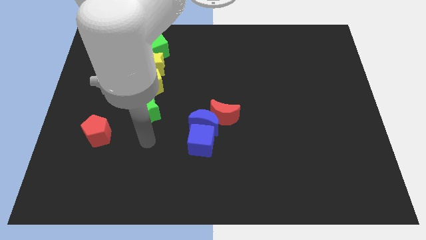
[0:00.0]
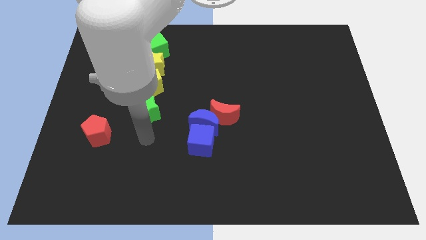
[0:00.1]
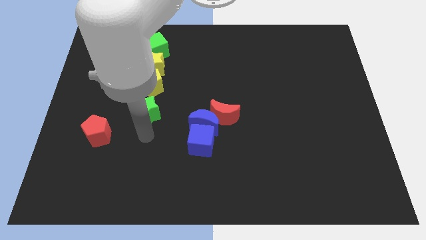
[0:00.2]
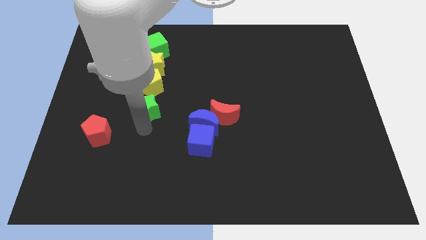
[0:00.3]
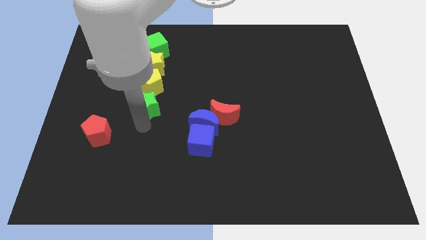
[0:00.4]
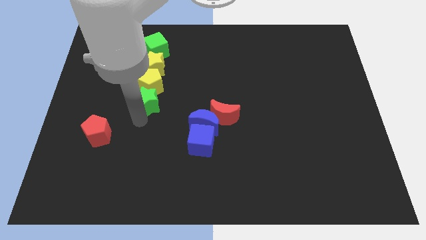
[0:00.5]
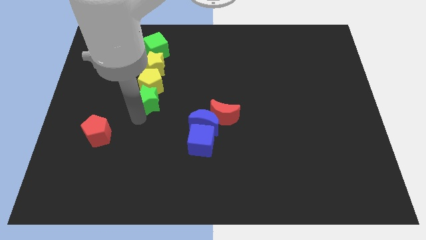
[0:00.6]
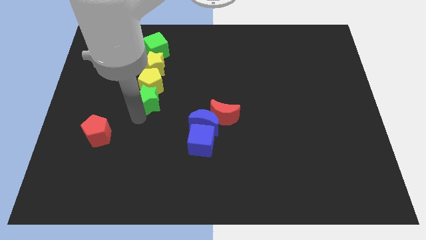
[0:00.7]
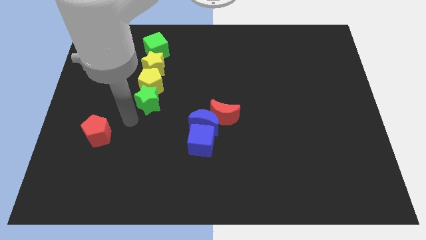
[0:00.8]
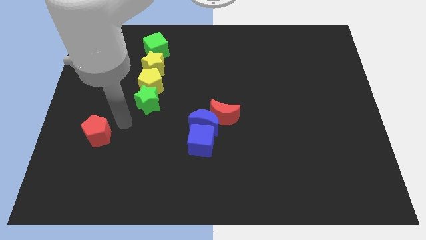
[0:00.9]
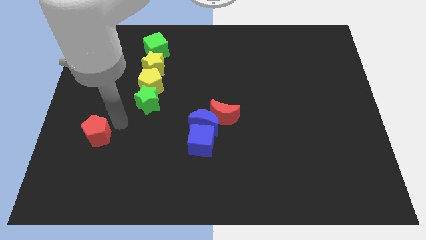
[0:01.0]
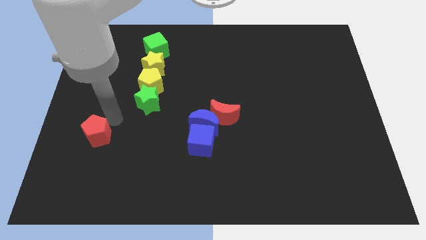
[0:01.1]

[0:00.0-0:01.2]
push the green star into the yellow pentagon

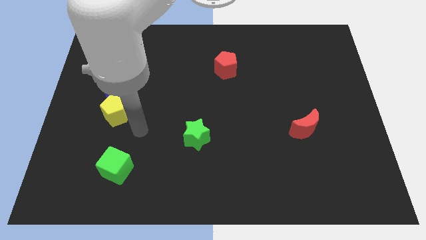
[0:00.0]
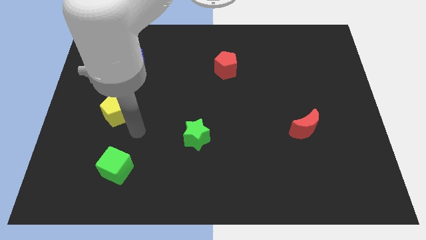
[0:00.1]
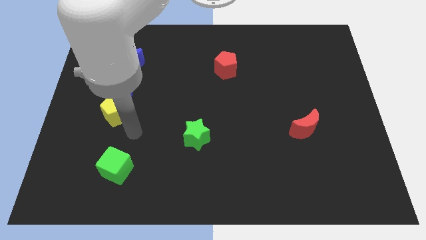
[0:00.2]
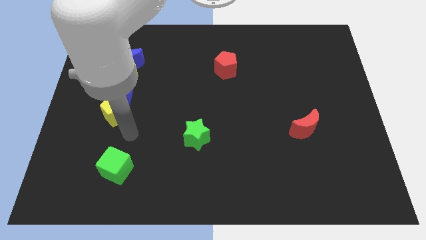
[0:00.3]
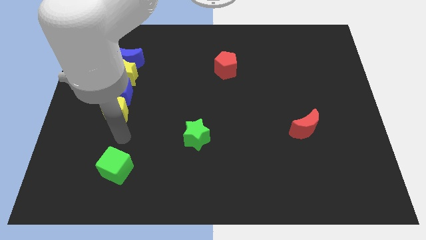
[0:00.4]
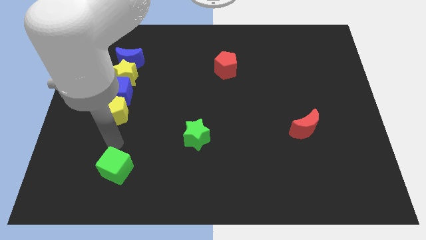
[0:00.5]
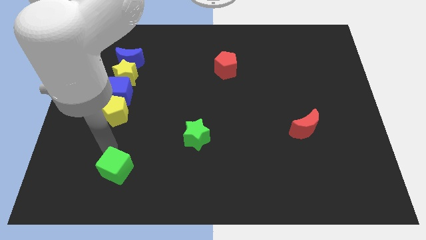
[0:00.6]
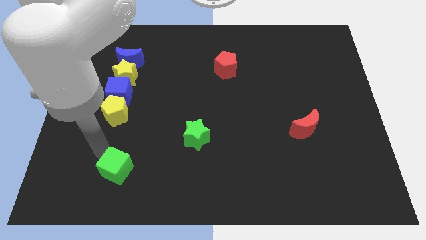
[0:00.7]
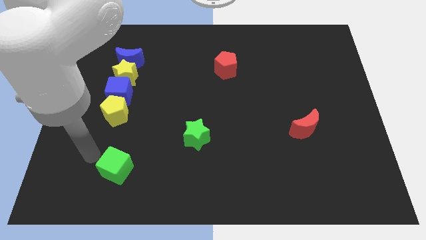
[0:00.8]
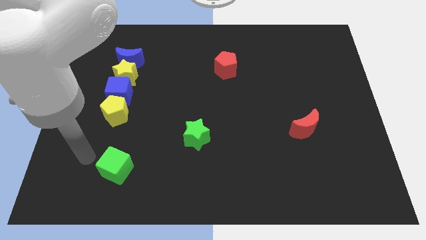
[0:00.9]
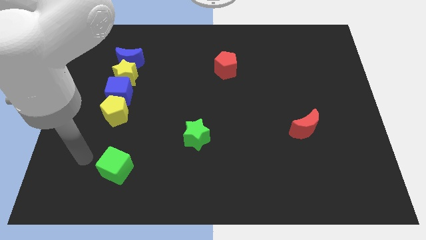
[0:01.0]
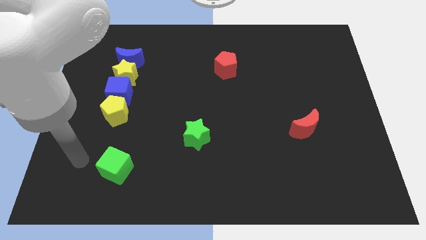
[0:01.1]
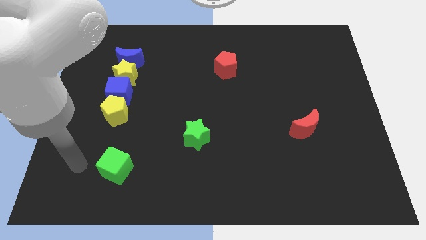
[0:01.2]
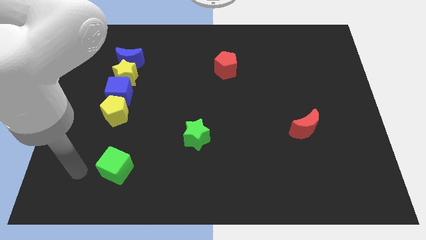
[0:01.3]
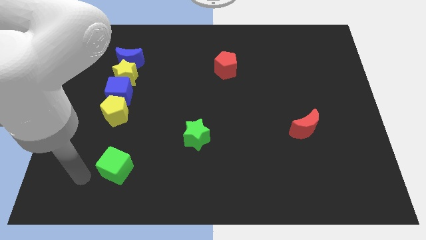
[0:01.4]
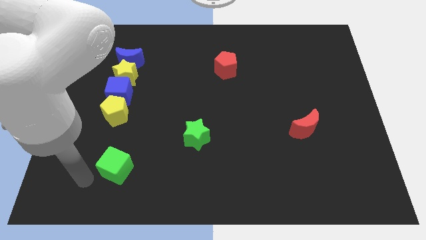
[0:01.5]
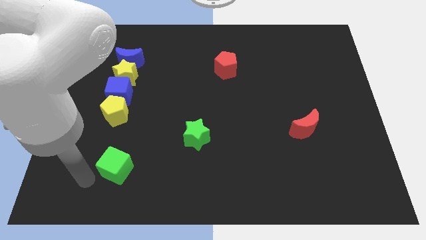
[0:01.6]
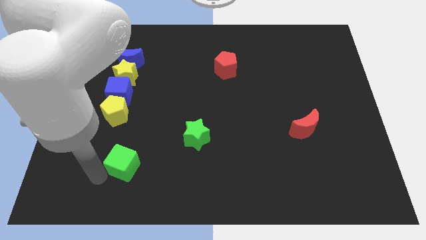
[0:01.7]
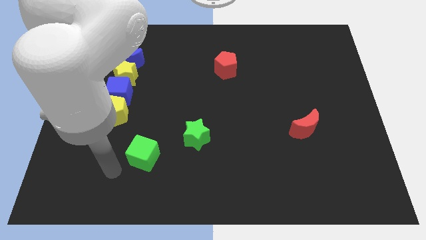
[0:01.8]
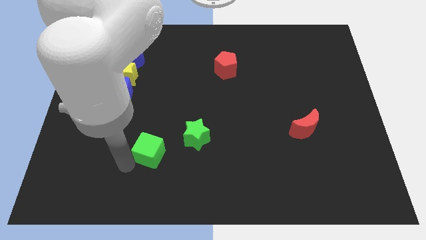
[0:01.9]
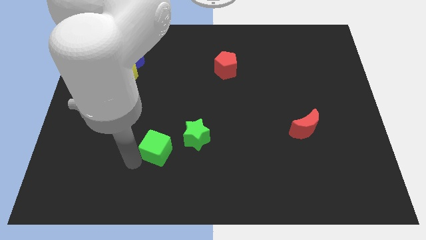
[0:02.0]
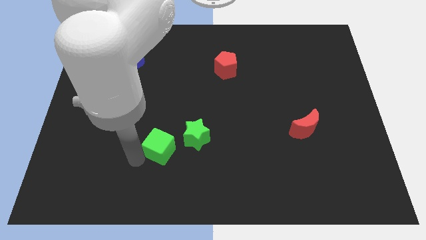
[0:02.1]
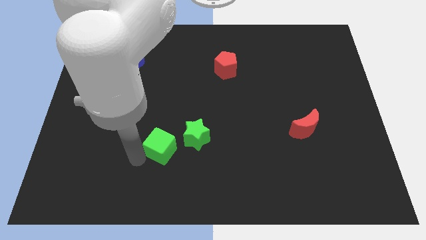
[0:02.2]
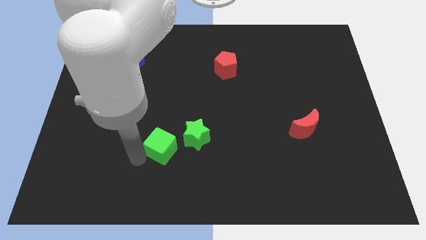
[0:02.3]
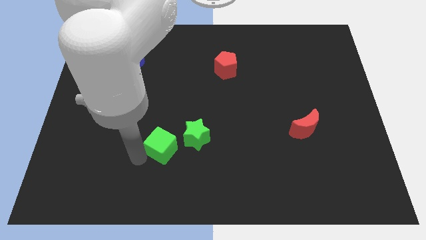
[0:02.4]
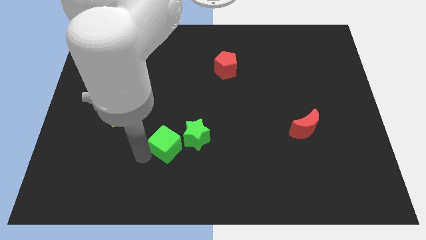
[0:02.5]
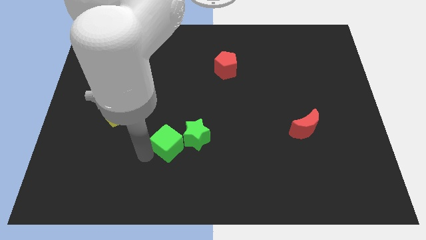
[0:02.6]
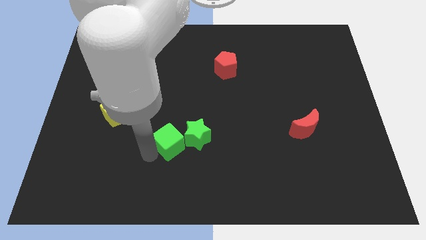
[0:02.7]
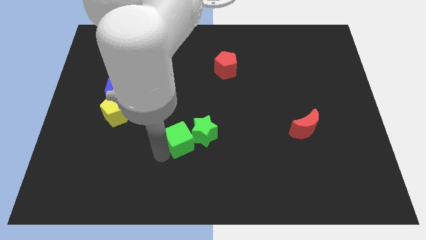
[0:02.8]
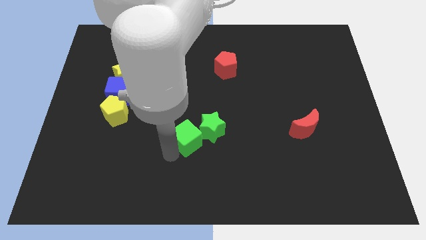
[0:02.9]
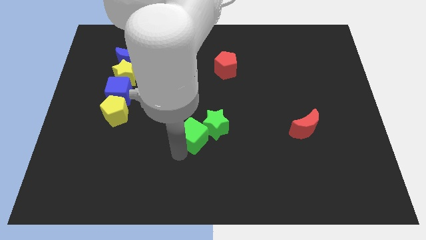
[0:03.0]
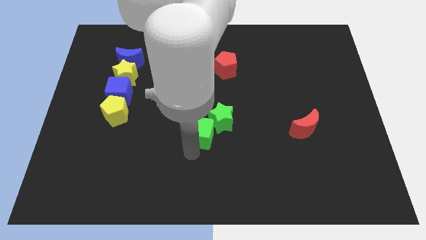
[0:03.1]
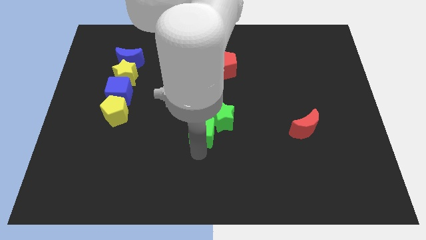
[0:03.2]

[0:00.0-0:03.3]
move the green blocks to the center of the board

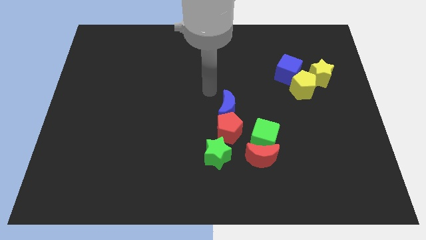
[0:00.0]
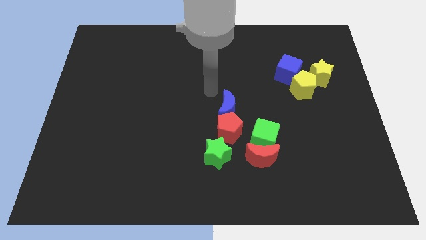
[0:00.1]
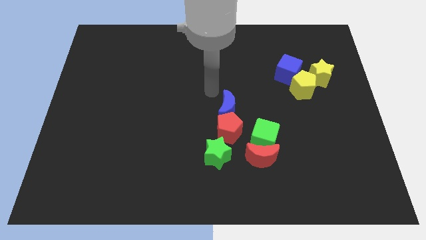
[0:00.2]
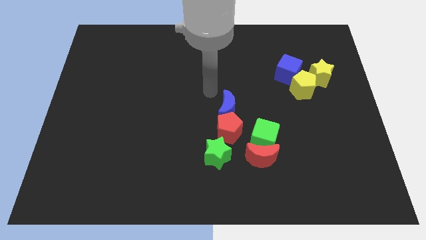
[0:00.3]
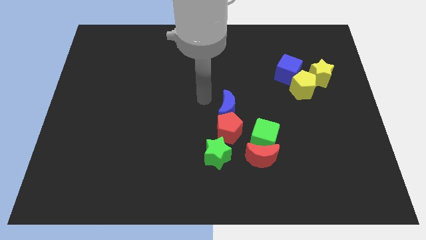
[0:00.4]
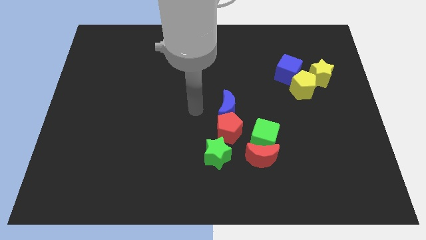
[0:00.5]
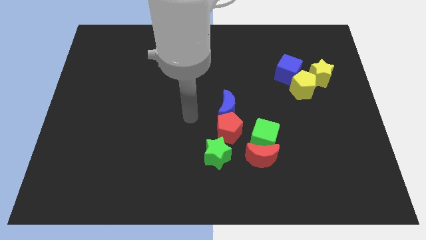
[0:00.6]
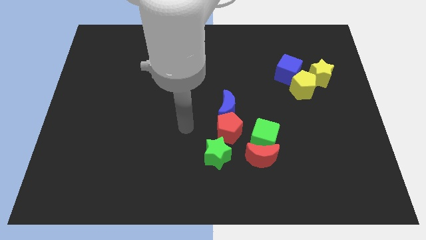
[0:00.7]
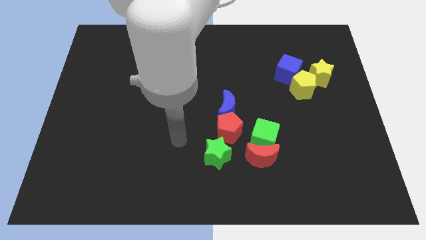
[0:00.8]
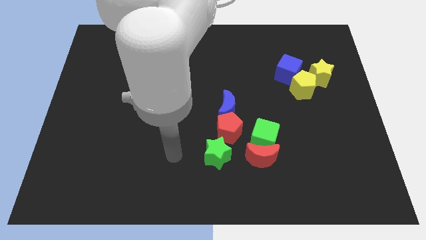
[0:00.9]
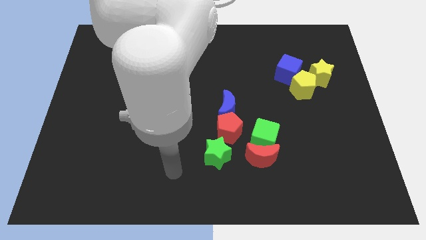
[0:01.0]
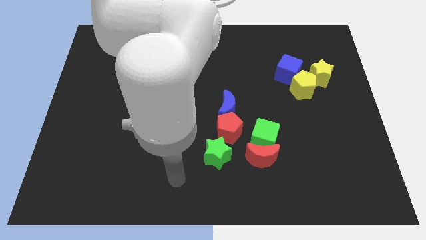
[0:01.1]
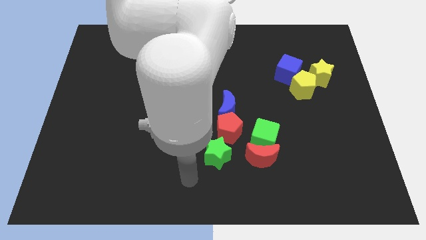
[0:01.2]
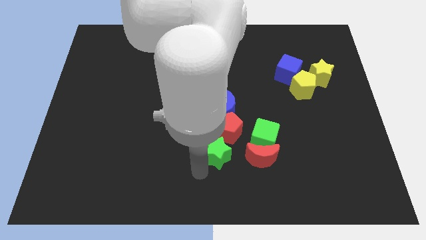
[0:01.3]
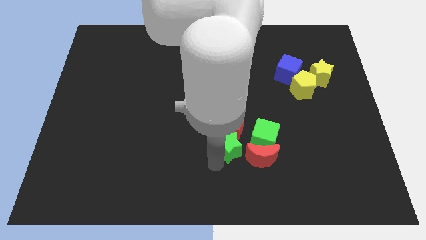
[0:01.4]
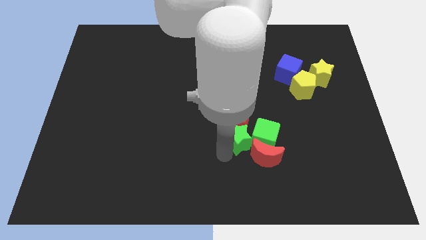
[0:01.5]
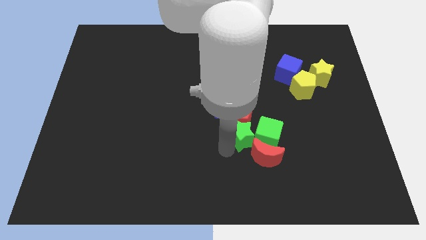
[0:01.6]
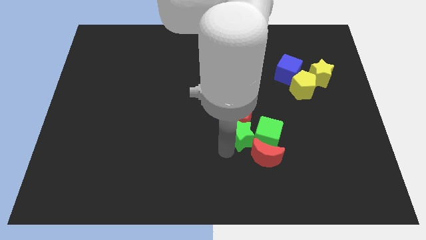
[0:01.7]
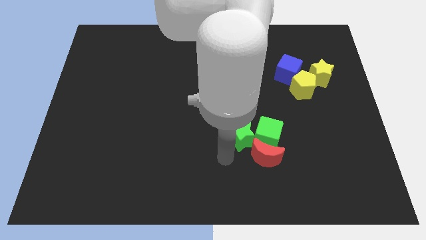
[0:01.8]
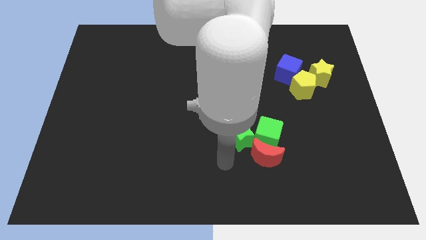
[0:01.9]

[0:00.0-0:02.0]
push the green star into the red pentagon

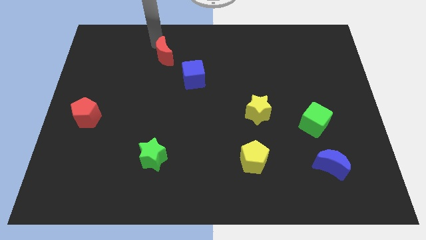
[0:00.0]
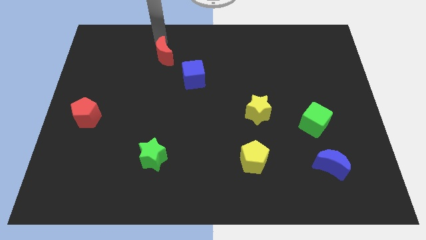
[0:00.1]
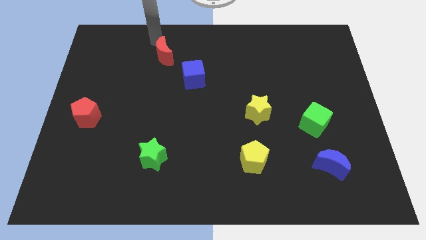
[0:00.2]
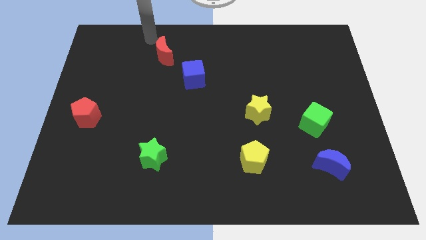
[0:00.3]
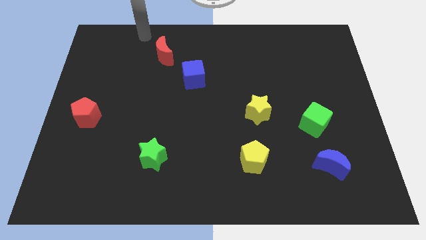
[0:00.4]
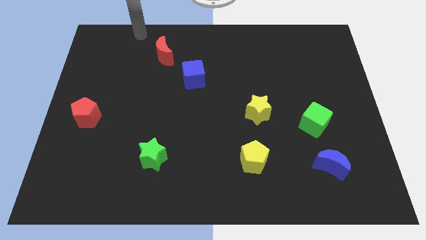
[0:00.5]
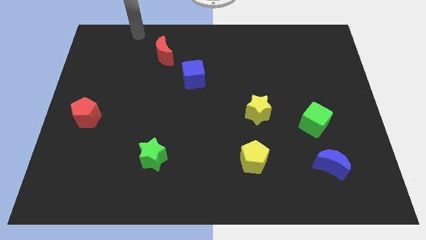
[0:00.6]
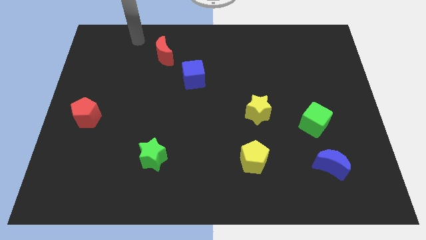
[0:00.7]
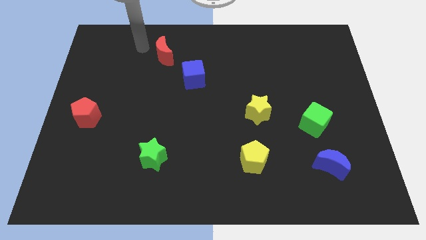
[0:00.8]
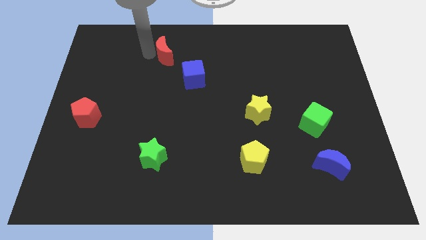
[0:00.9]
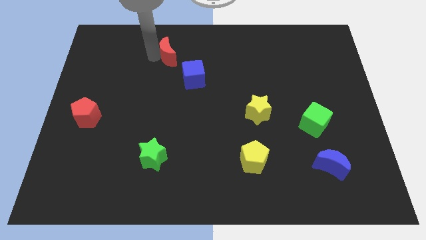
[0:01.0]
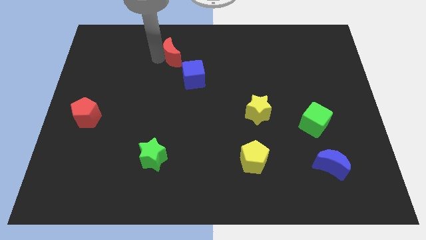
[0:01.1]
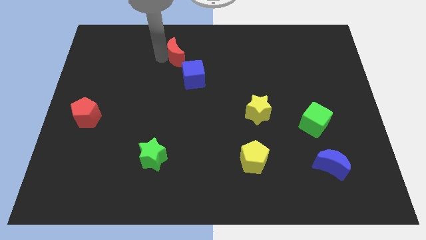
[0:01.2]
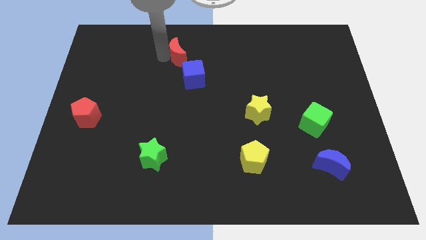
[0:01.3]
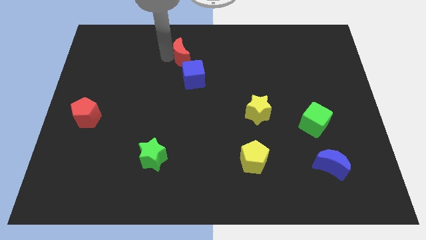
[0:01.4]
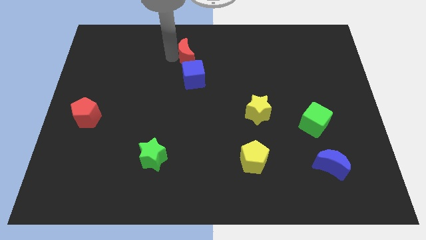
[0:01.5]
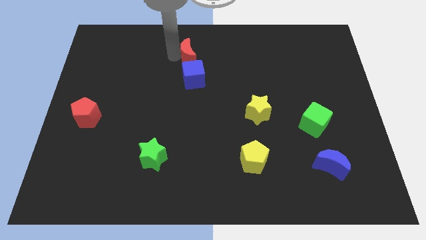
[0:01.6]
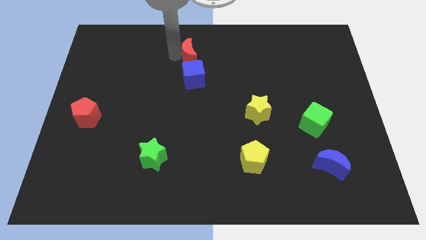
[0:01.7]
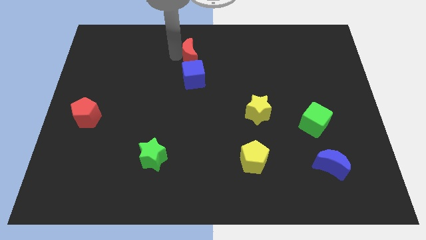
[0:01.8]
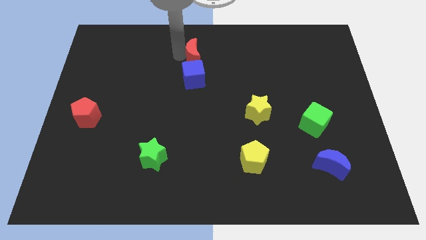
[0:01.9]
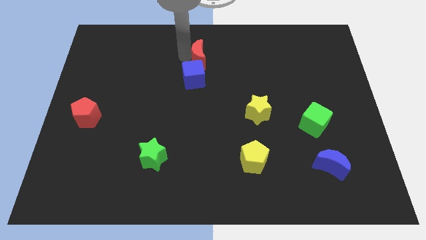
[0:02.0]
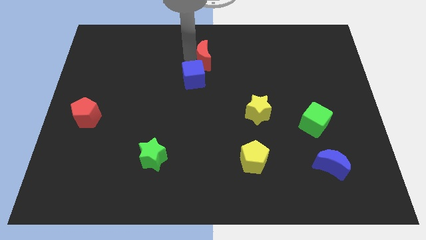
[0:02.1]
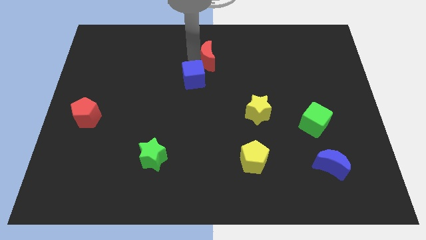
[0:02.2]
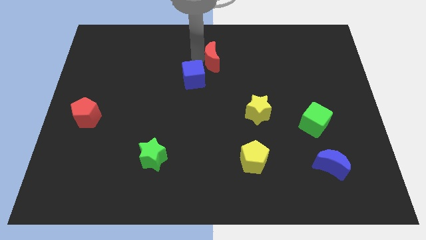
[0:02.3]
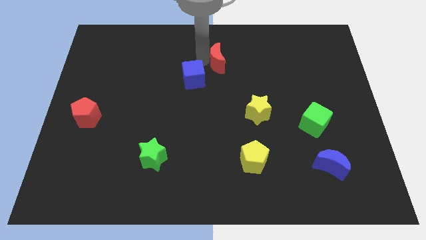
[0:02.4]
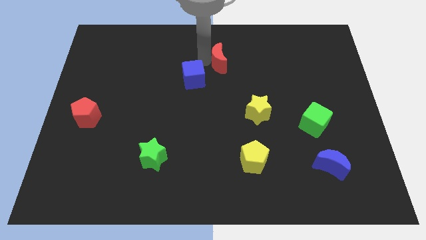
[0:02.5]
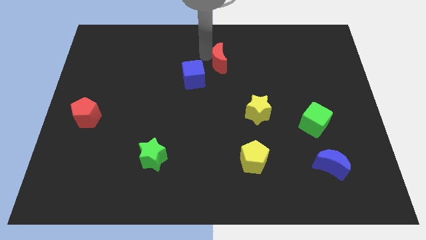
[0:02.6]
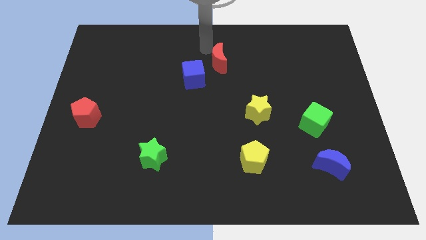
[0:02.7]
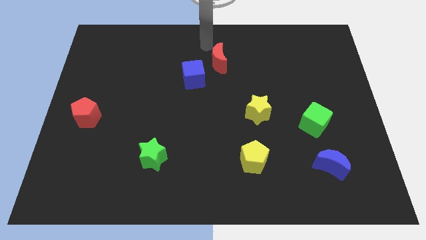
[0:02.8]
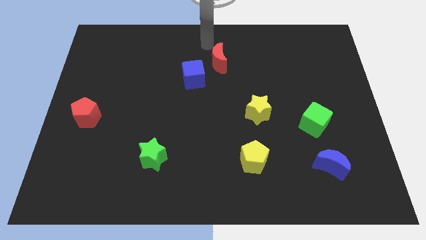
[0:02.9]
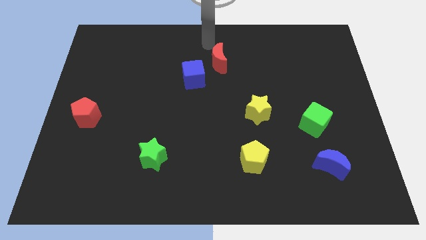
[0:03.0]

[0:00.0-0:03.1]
slide the red moon diagonally to the top right of the blue cube
